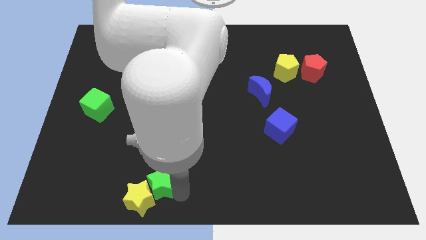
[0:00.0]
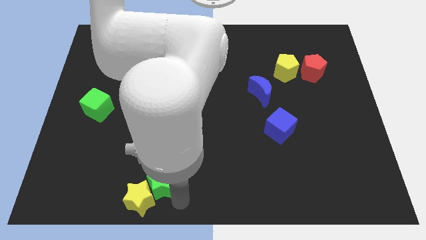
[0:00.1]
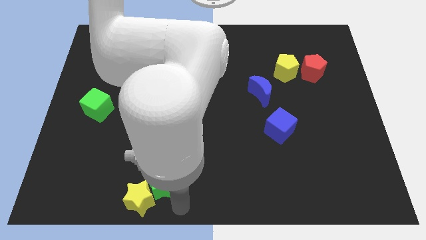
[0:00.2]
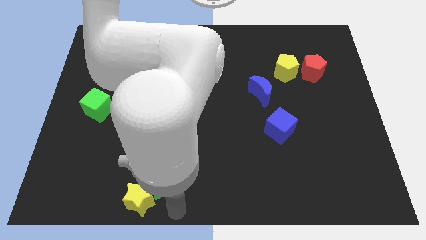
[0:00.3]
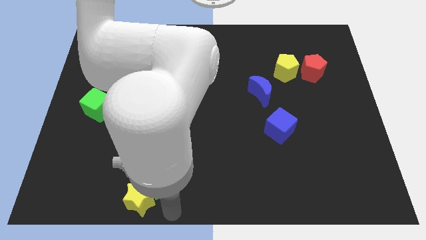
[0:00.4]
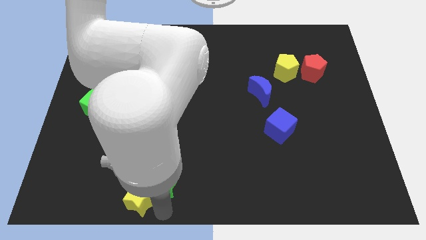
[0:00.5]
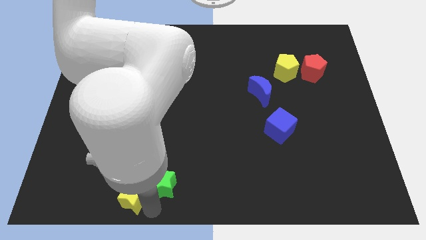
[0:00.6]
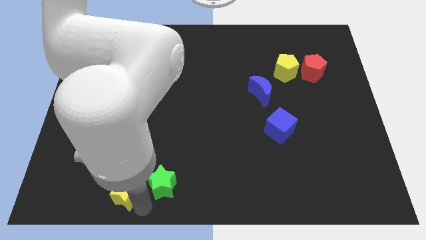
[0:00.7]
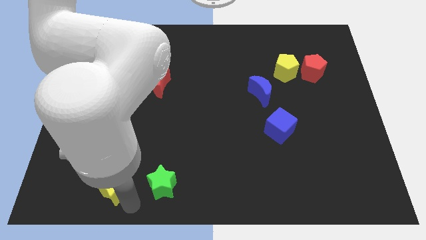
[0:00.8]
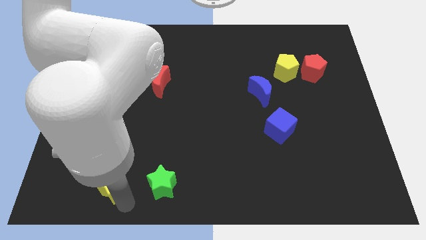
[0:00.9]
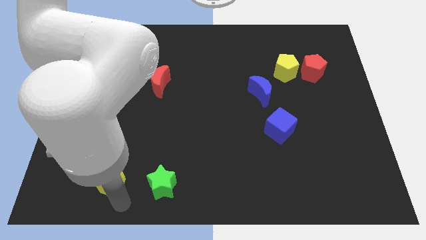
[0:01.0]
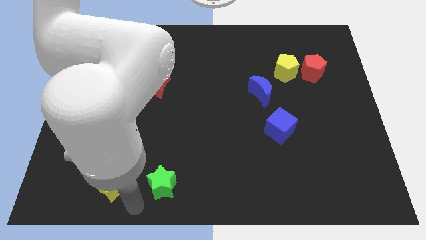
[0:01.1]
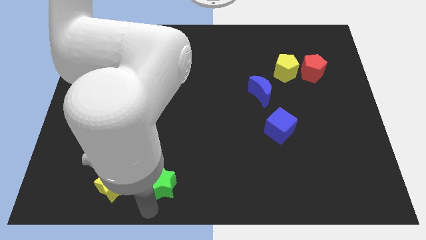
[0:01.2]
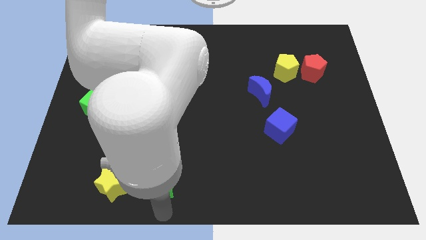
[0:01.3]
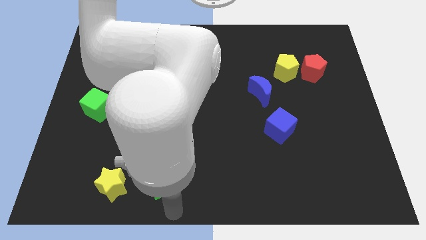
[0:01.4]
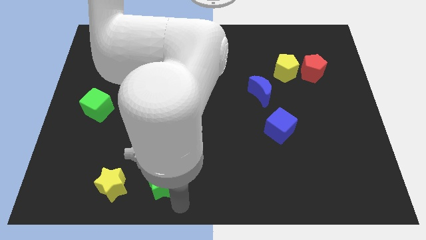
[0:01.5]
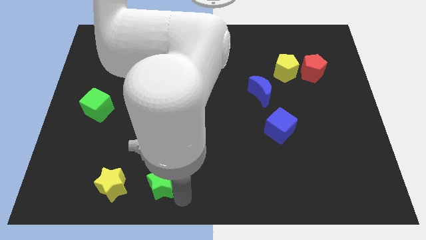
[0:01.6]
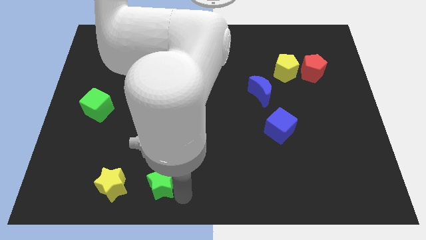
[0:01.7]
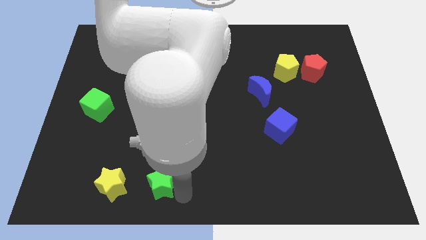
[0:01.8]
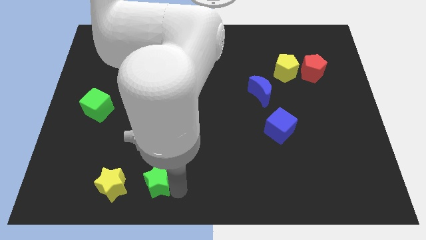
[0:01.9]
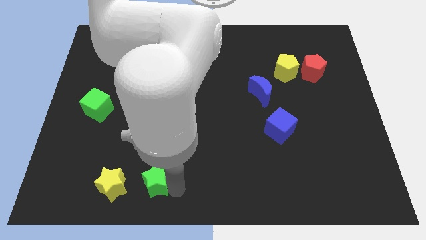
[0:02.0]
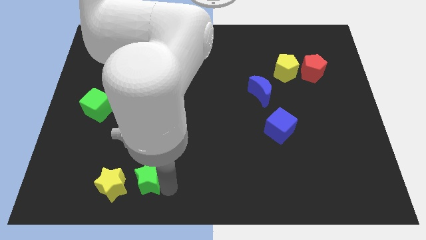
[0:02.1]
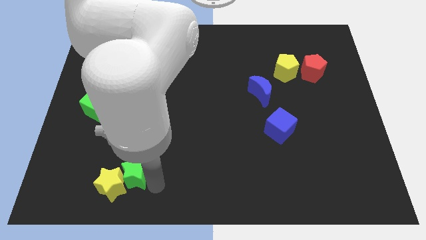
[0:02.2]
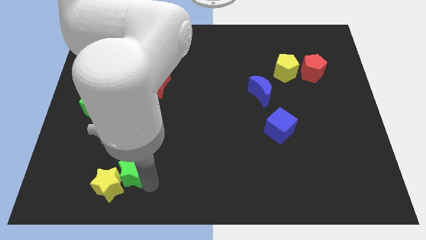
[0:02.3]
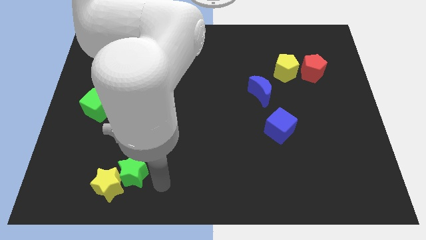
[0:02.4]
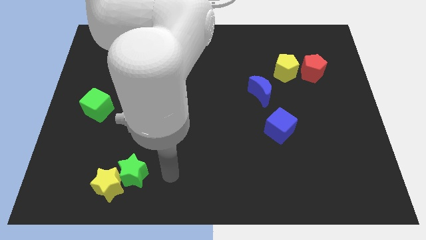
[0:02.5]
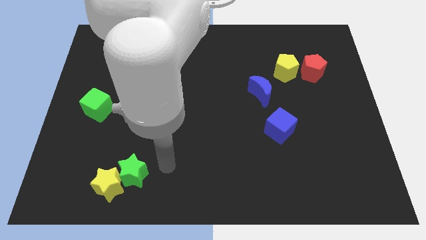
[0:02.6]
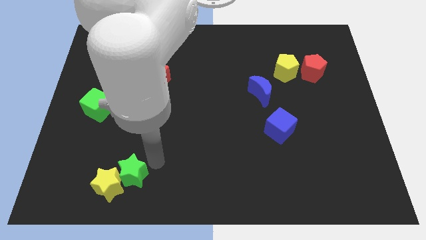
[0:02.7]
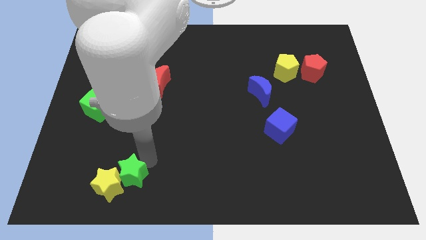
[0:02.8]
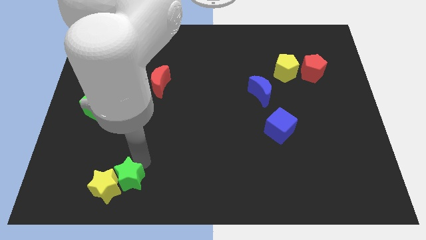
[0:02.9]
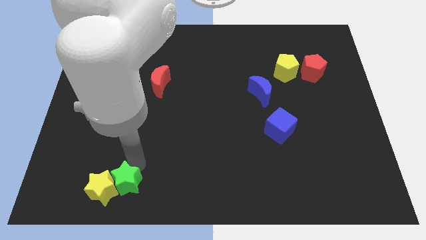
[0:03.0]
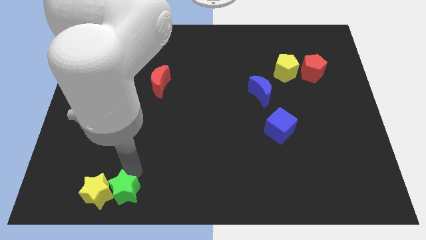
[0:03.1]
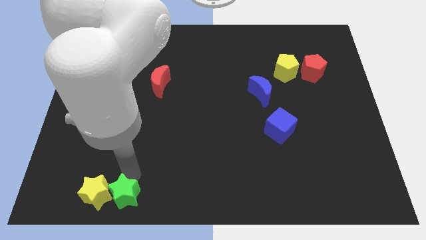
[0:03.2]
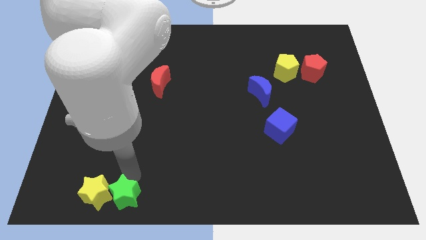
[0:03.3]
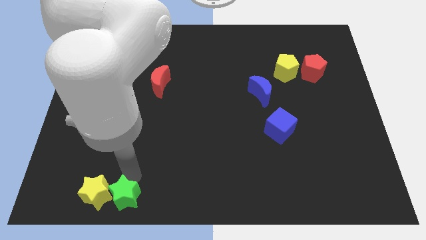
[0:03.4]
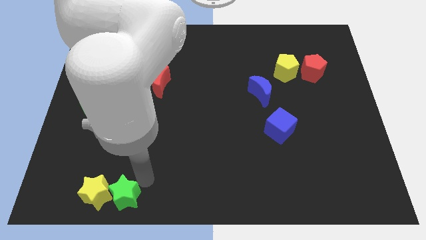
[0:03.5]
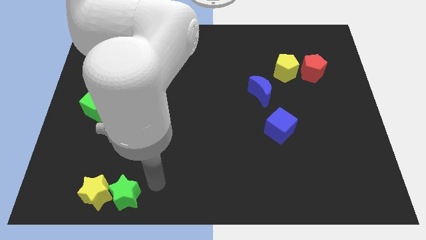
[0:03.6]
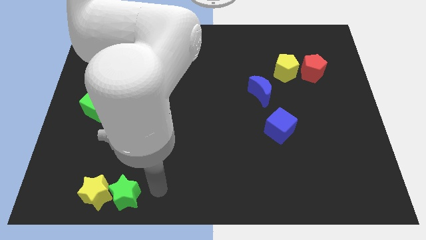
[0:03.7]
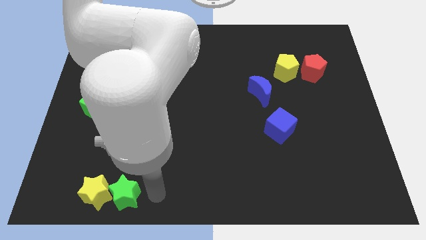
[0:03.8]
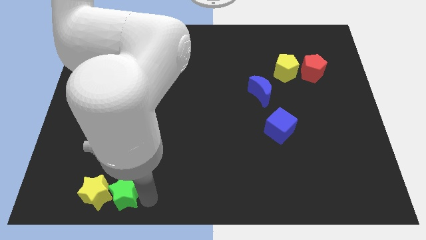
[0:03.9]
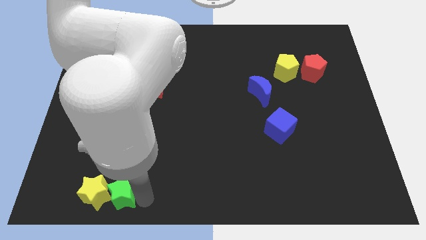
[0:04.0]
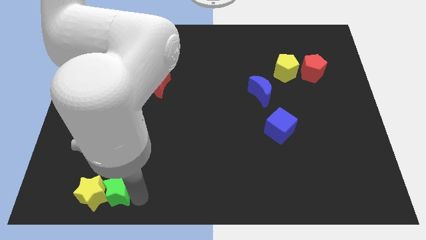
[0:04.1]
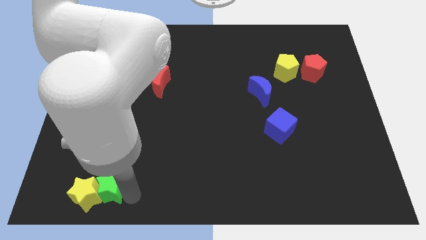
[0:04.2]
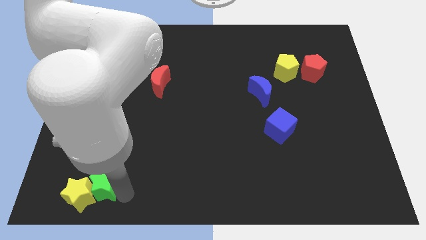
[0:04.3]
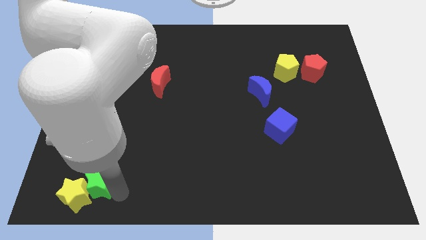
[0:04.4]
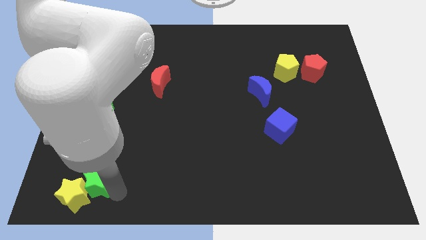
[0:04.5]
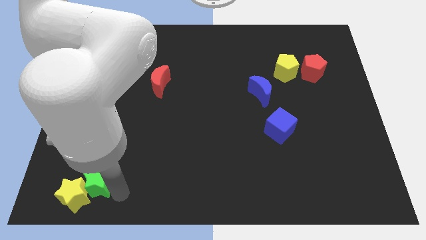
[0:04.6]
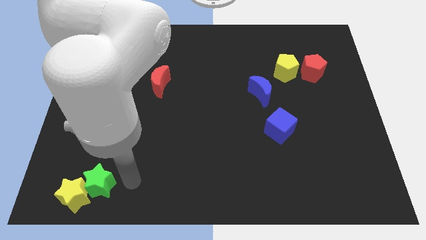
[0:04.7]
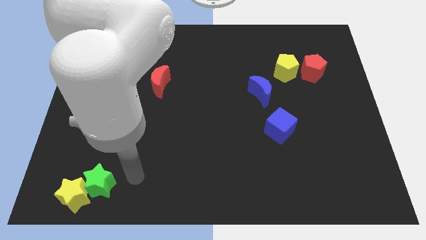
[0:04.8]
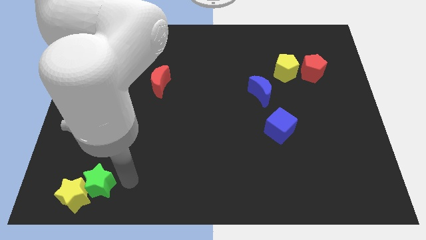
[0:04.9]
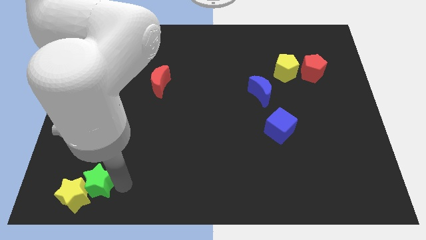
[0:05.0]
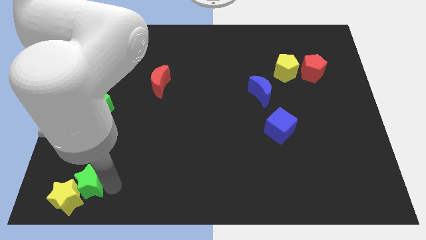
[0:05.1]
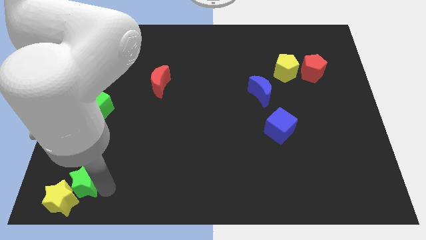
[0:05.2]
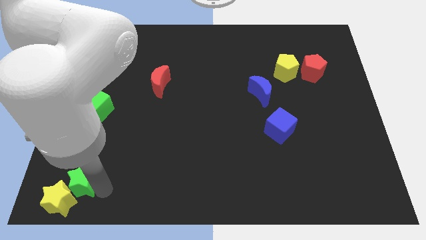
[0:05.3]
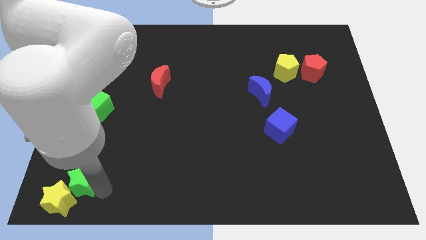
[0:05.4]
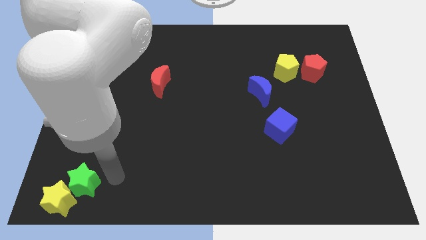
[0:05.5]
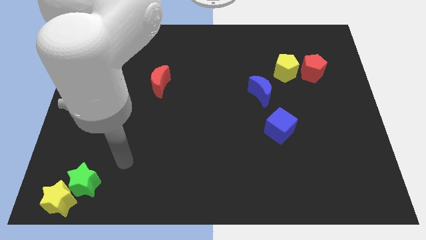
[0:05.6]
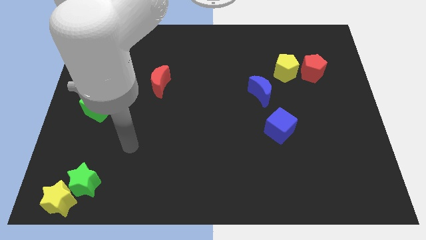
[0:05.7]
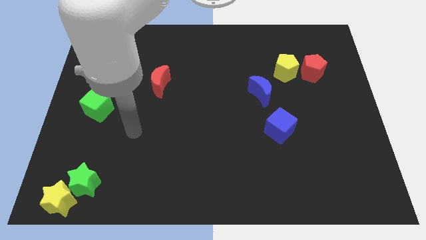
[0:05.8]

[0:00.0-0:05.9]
move the yellow star and the green star towards the bottom left corner of the board

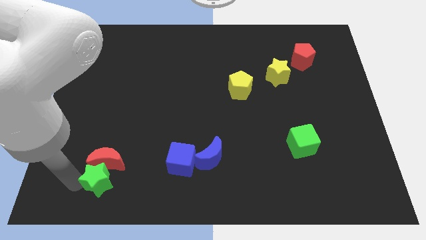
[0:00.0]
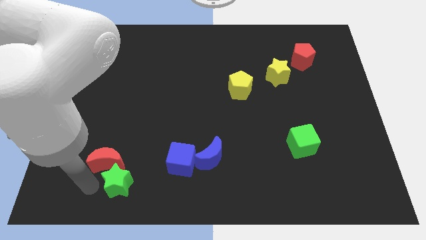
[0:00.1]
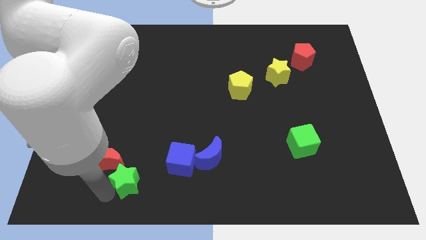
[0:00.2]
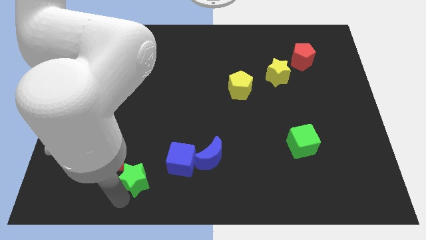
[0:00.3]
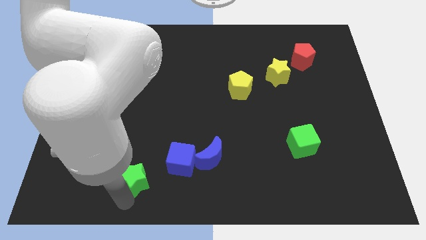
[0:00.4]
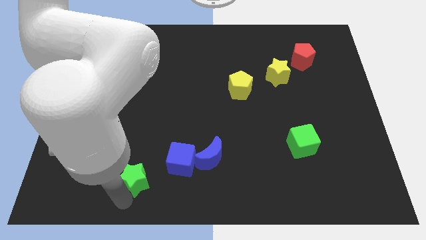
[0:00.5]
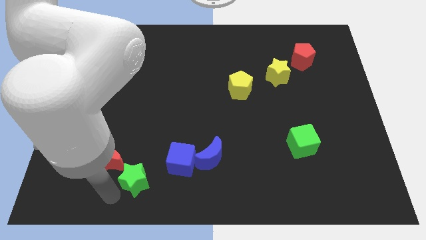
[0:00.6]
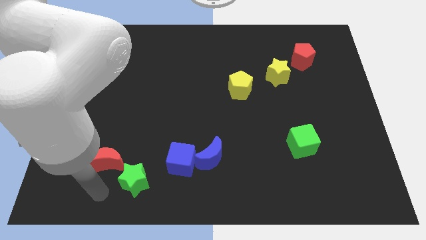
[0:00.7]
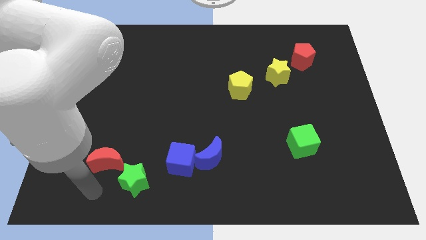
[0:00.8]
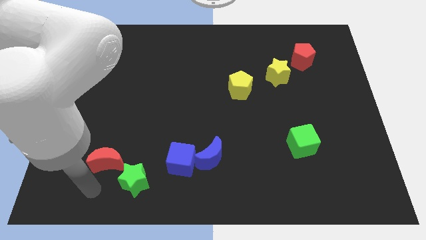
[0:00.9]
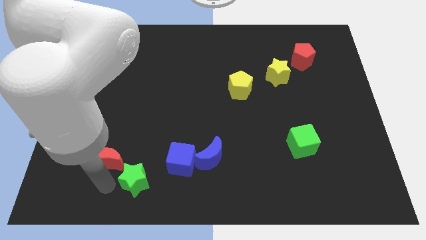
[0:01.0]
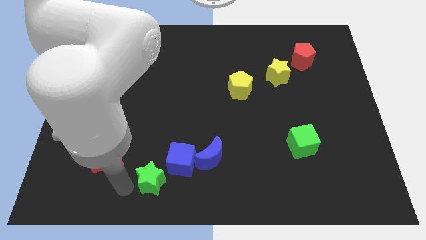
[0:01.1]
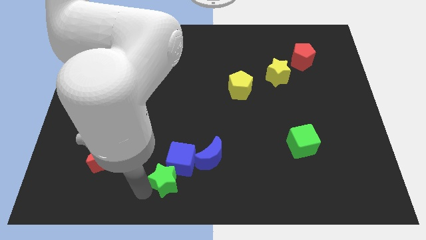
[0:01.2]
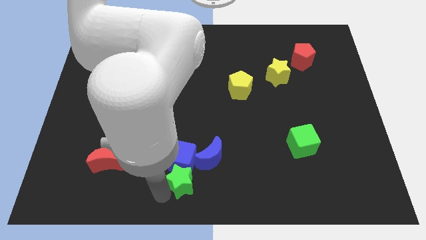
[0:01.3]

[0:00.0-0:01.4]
move the green star left below the blue cube

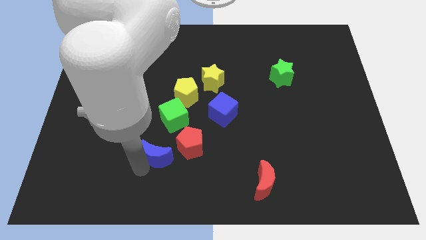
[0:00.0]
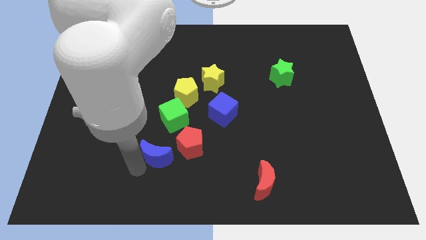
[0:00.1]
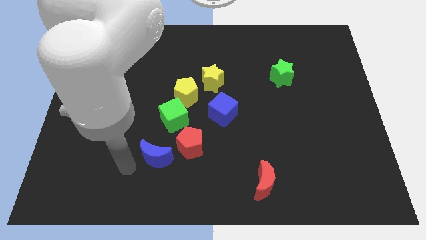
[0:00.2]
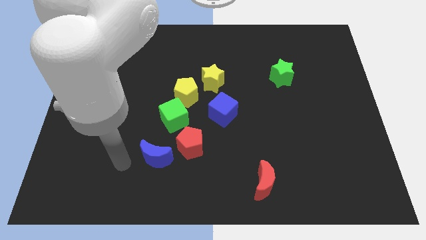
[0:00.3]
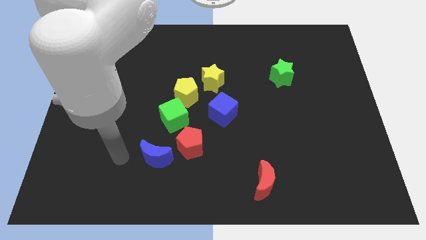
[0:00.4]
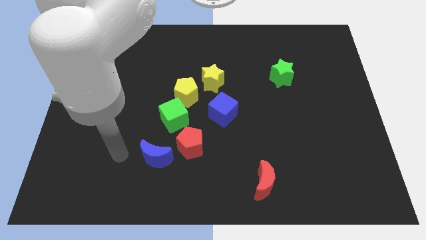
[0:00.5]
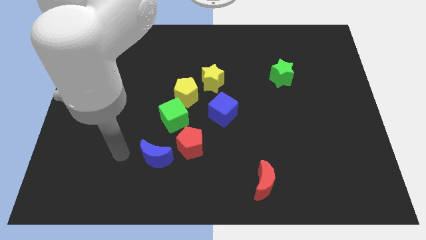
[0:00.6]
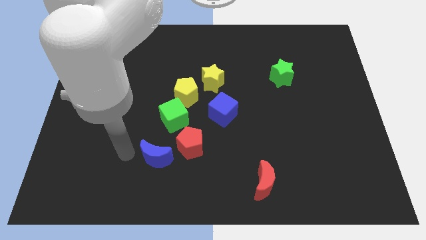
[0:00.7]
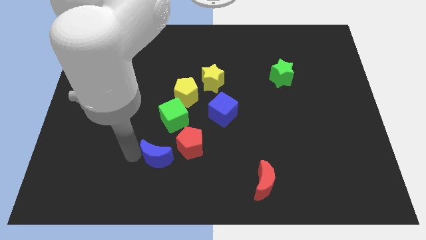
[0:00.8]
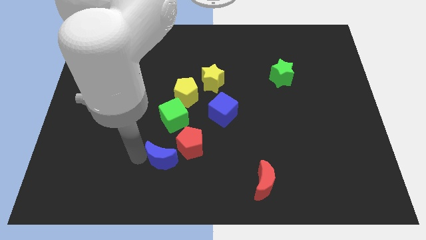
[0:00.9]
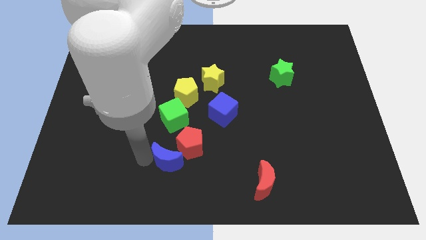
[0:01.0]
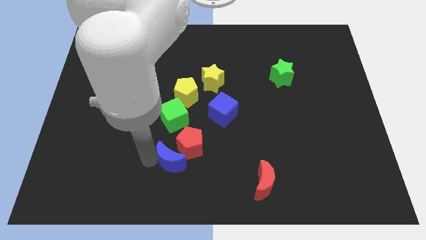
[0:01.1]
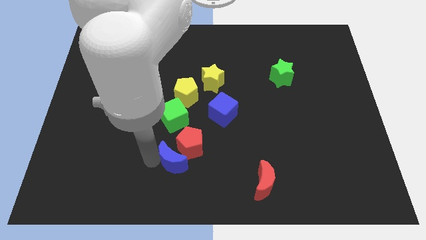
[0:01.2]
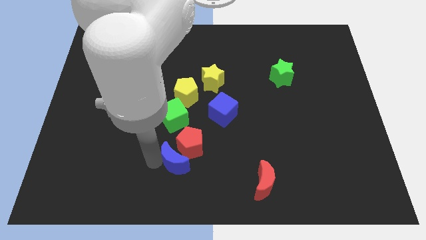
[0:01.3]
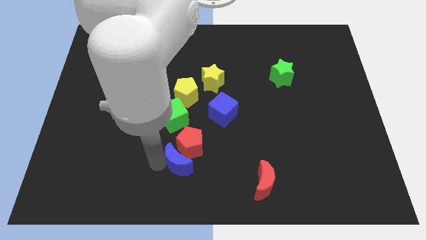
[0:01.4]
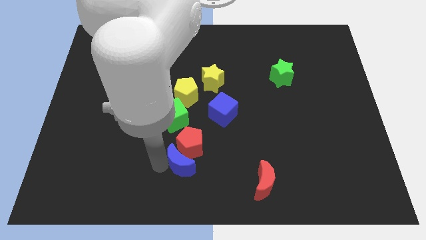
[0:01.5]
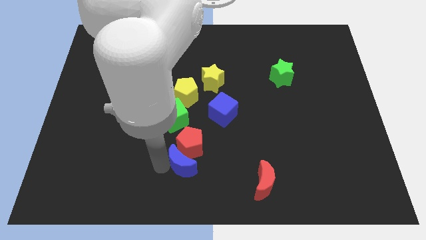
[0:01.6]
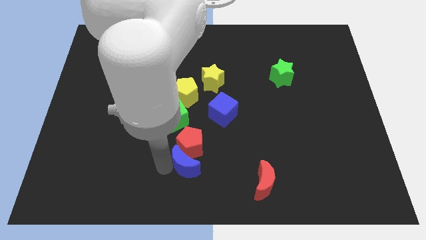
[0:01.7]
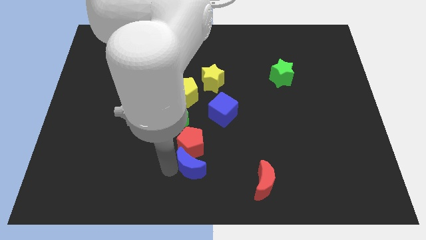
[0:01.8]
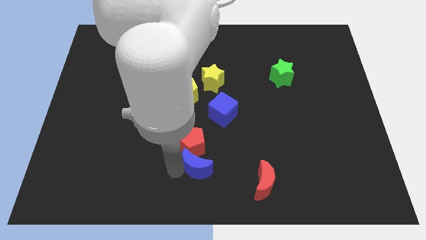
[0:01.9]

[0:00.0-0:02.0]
push the blue crescent towards the bottom of the red pentagon
